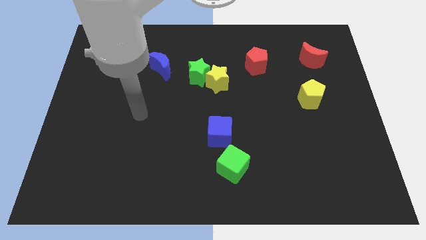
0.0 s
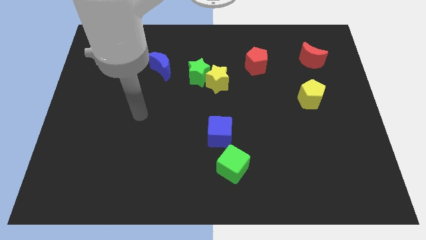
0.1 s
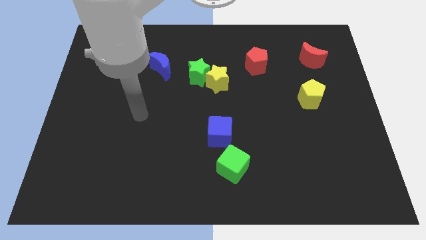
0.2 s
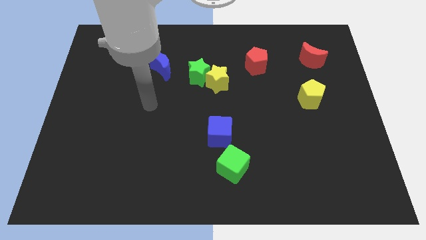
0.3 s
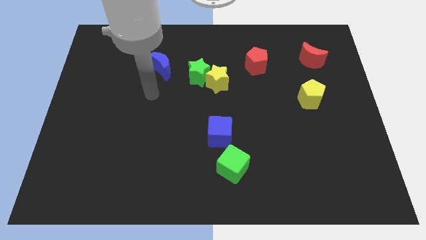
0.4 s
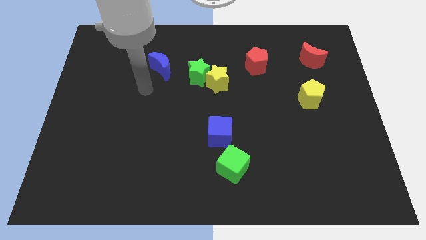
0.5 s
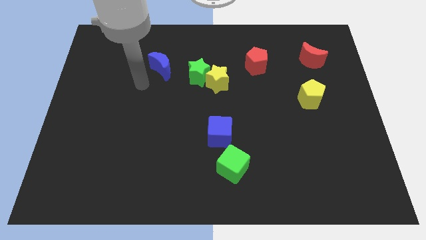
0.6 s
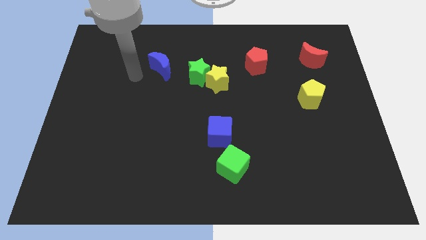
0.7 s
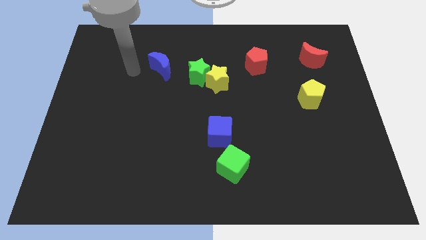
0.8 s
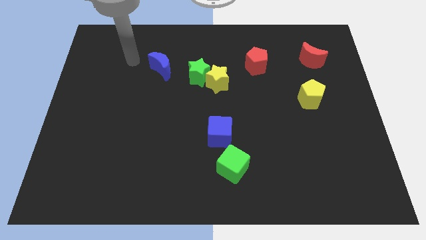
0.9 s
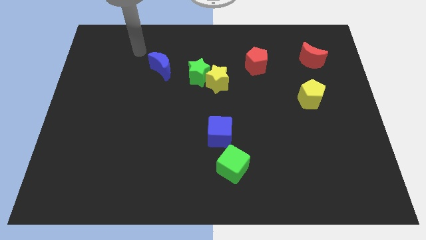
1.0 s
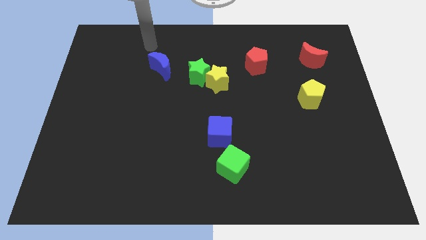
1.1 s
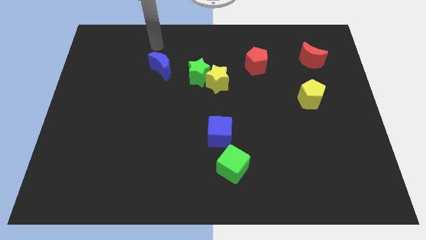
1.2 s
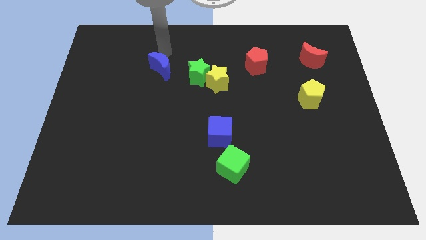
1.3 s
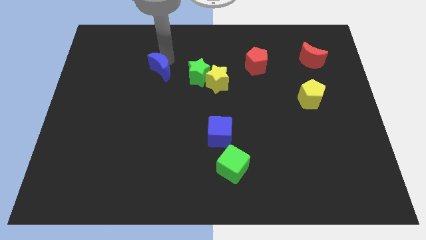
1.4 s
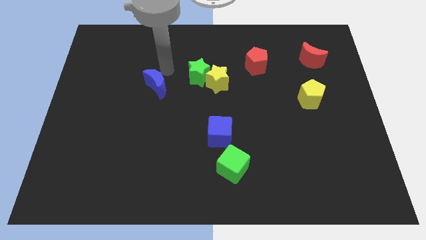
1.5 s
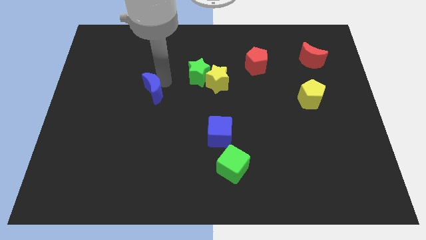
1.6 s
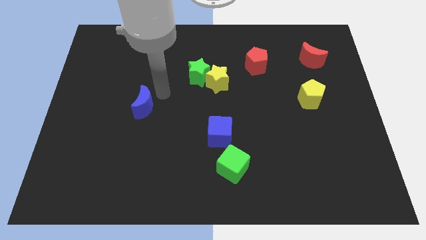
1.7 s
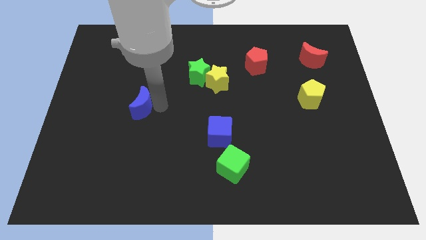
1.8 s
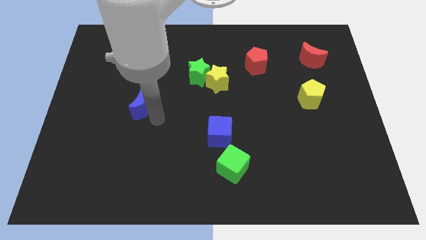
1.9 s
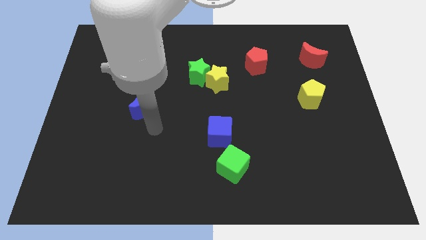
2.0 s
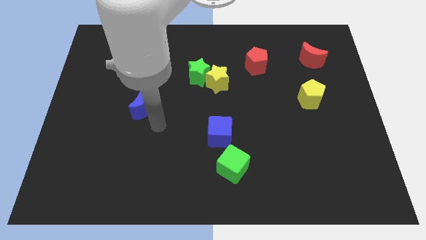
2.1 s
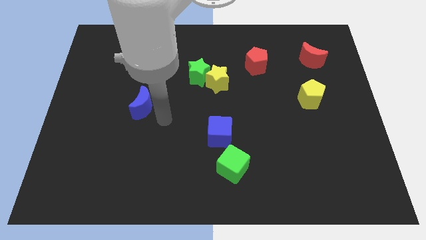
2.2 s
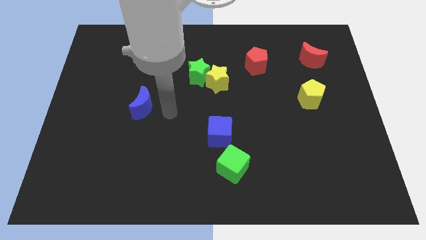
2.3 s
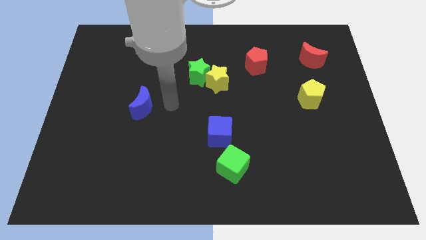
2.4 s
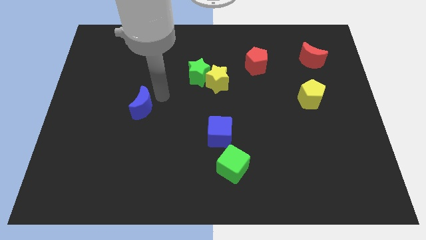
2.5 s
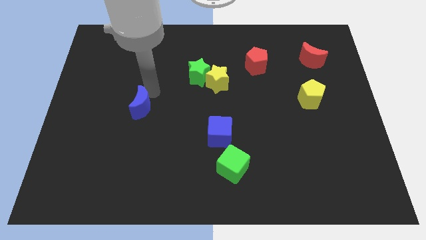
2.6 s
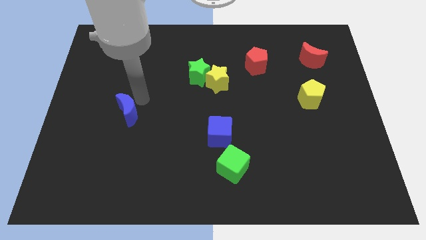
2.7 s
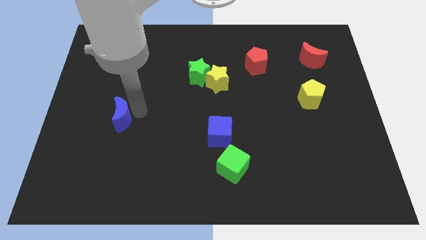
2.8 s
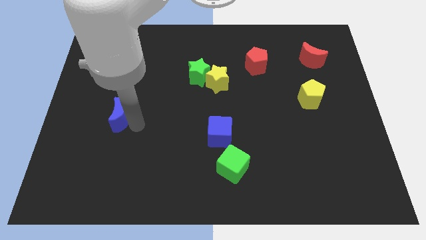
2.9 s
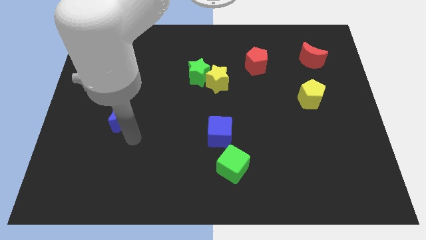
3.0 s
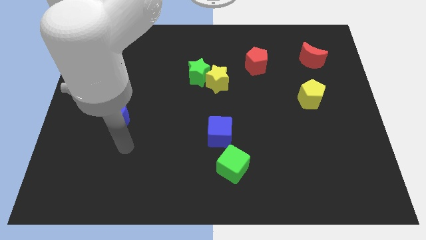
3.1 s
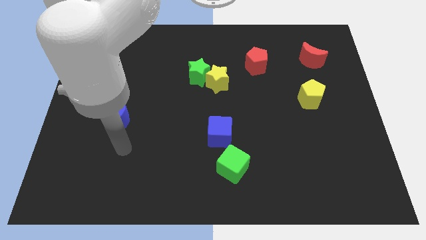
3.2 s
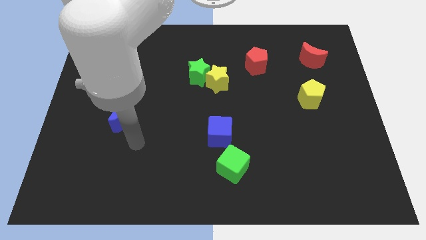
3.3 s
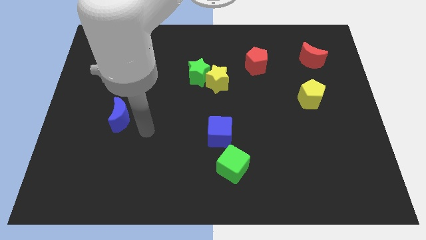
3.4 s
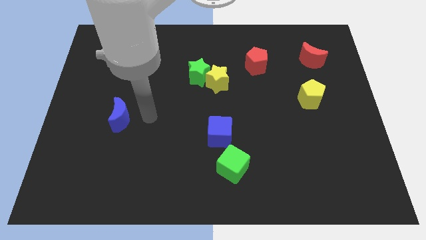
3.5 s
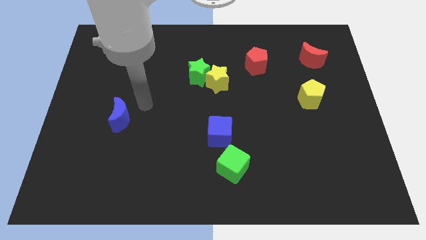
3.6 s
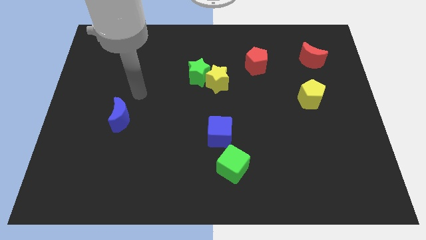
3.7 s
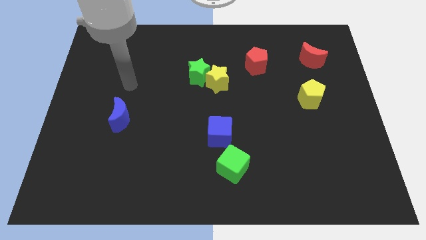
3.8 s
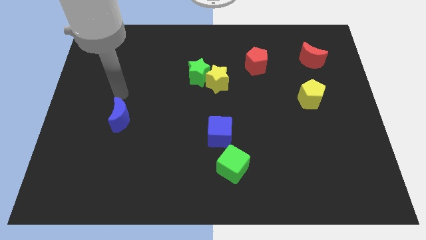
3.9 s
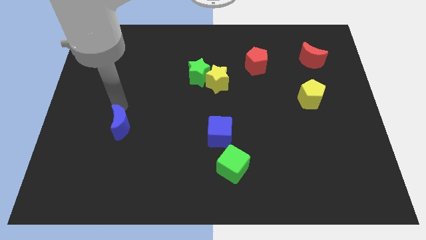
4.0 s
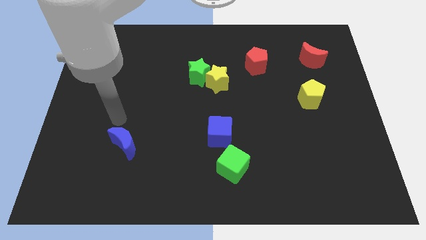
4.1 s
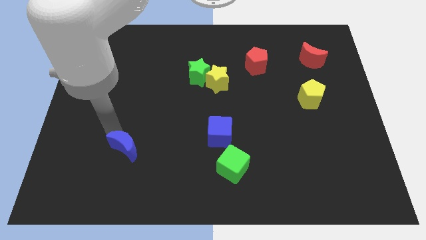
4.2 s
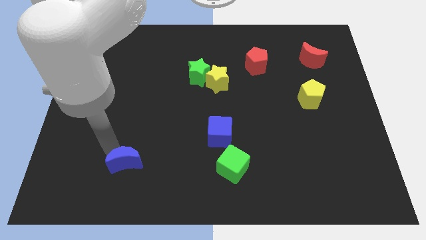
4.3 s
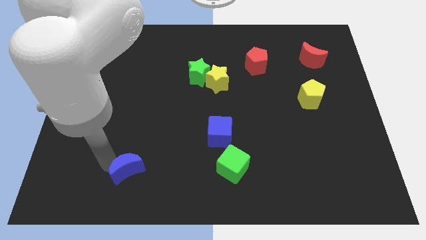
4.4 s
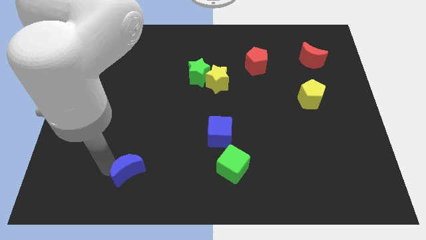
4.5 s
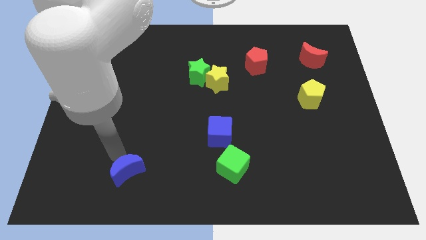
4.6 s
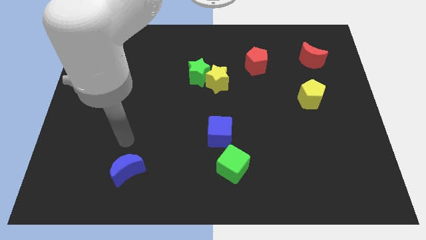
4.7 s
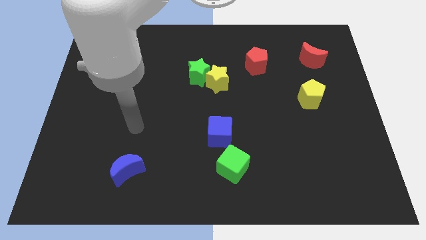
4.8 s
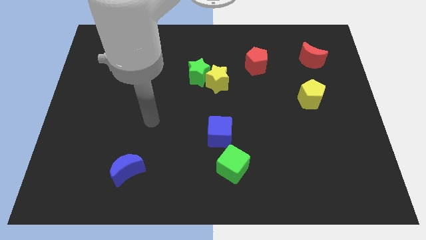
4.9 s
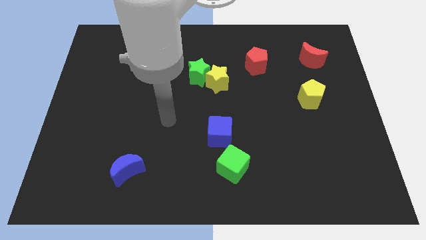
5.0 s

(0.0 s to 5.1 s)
push the blue moon to the bottom of the board

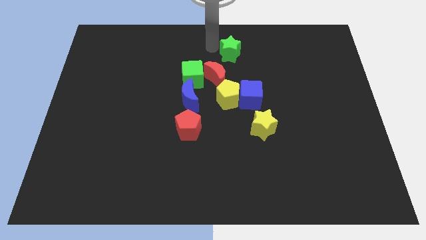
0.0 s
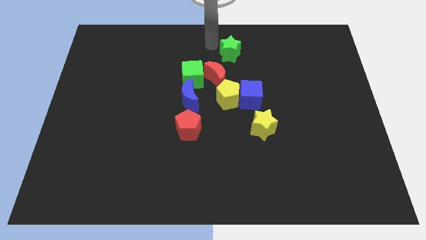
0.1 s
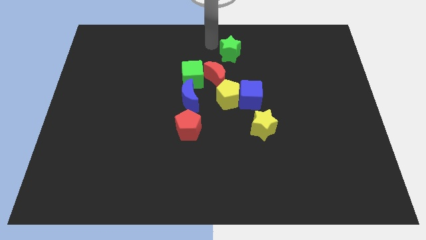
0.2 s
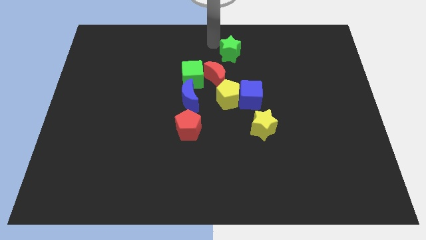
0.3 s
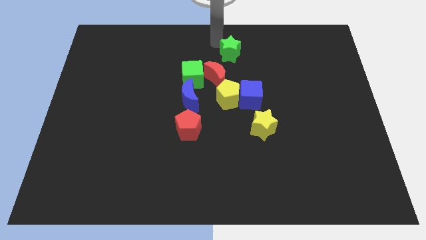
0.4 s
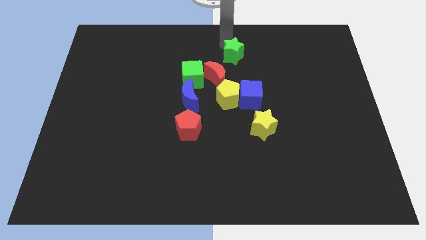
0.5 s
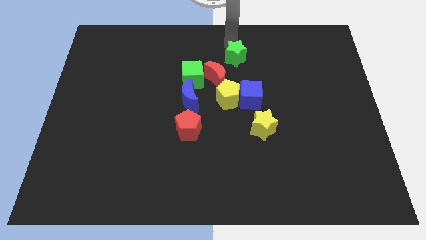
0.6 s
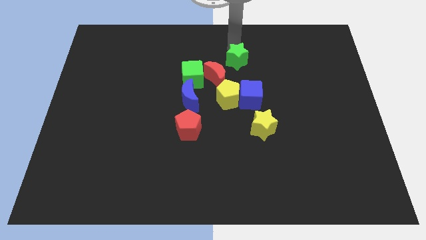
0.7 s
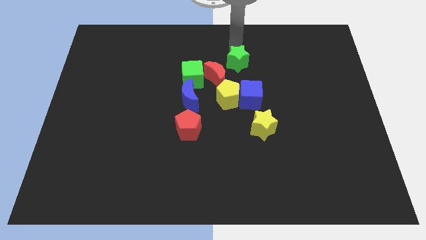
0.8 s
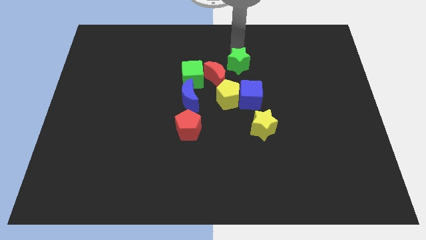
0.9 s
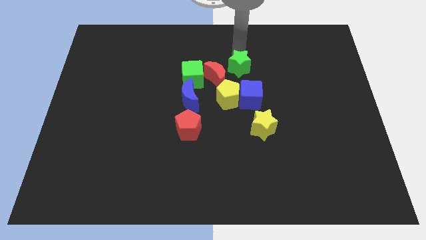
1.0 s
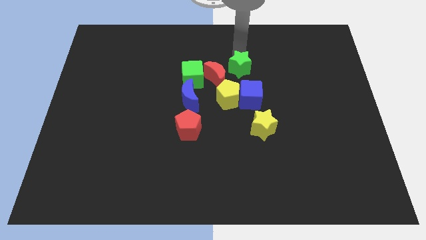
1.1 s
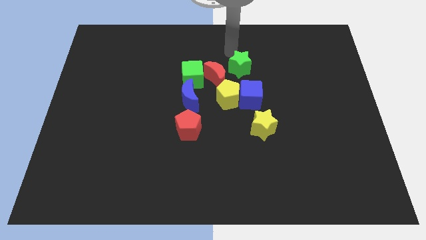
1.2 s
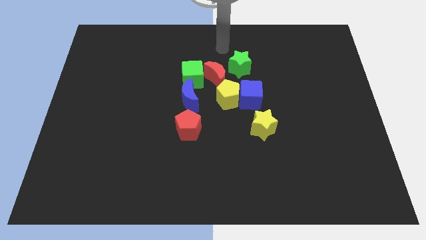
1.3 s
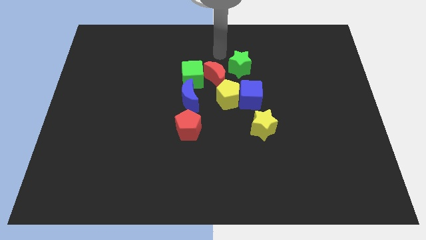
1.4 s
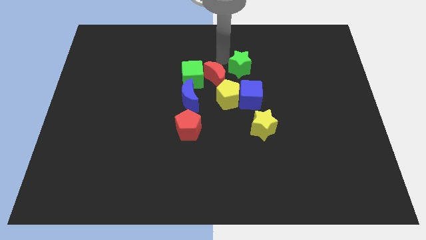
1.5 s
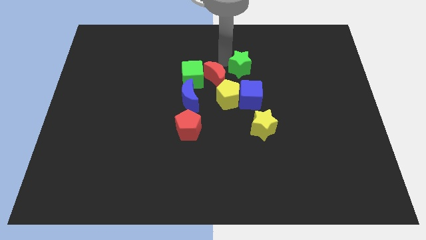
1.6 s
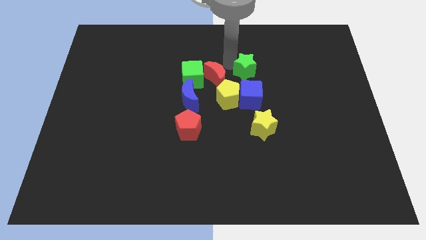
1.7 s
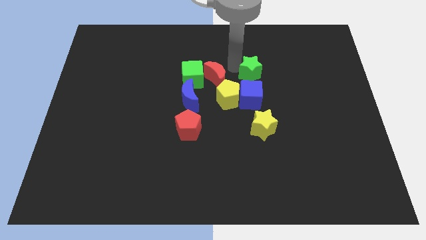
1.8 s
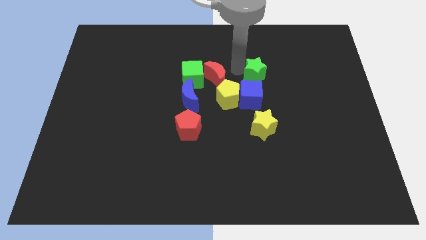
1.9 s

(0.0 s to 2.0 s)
place green star above the blue cube

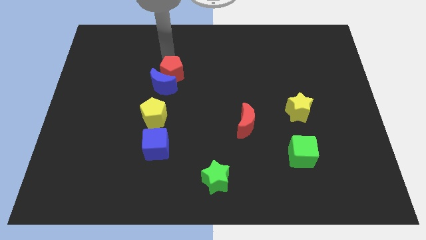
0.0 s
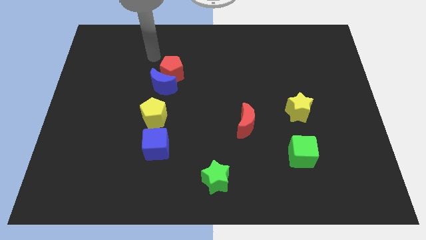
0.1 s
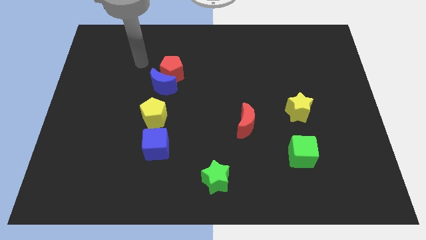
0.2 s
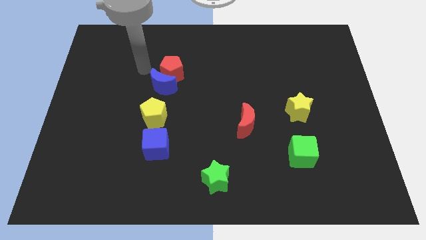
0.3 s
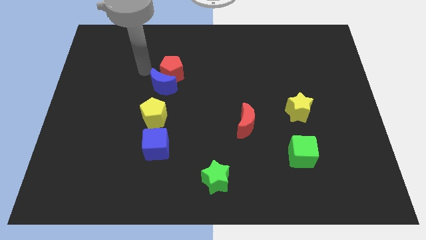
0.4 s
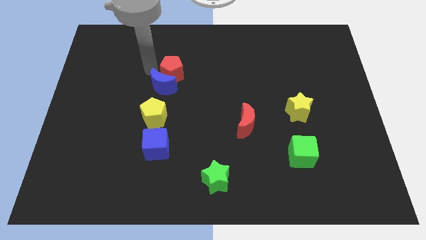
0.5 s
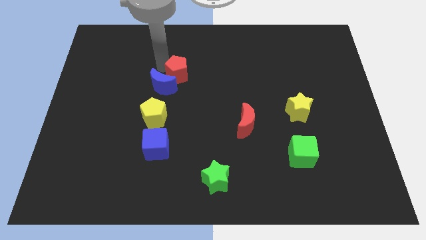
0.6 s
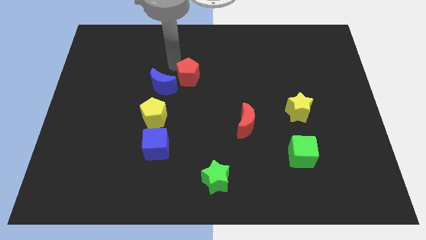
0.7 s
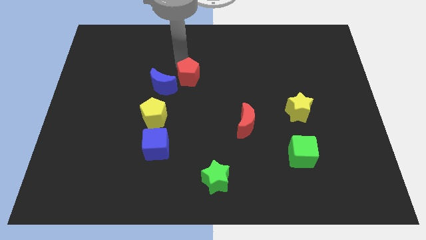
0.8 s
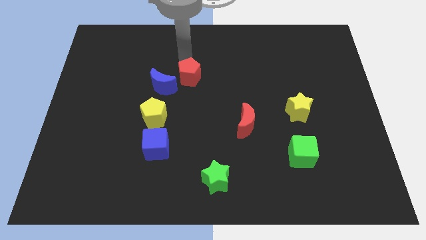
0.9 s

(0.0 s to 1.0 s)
separate the red pentagon from the blue crescent

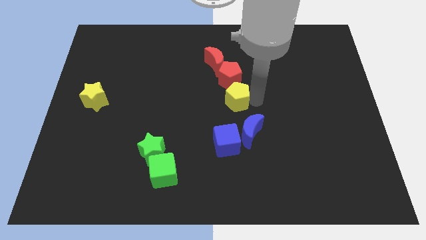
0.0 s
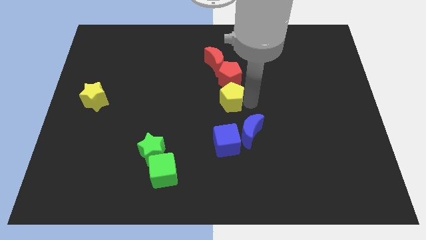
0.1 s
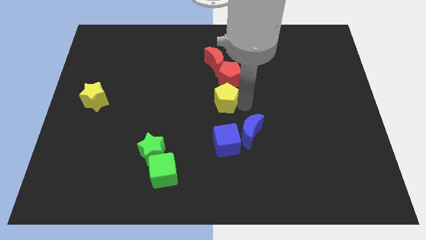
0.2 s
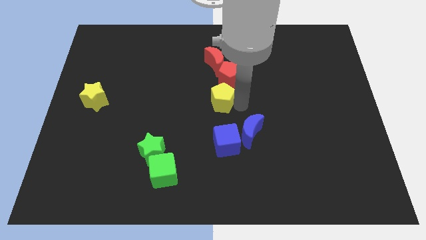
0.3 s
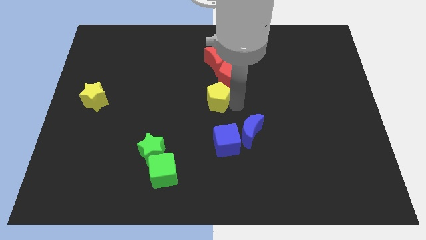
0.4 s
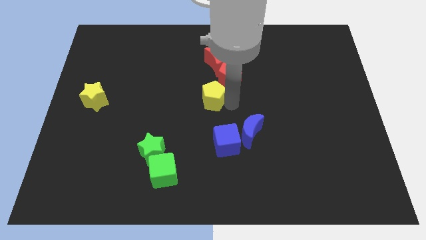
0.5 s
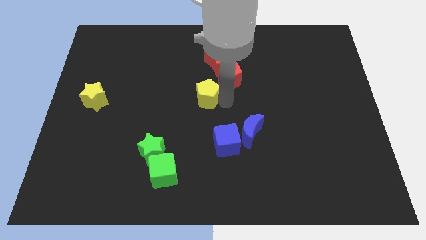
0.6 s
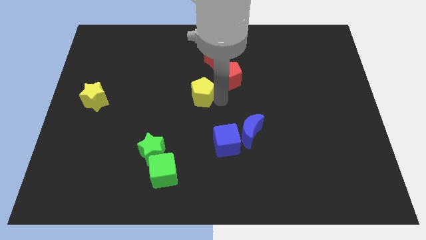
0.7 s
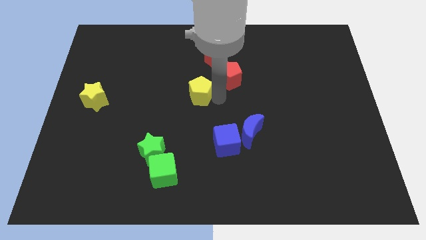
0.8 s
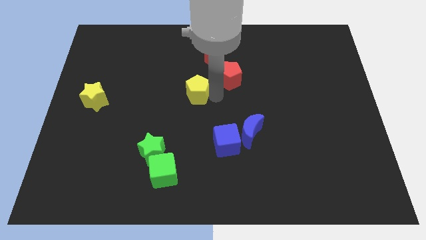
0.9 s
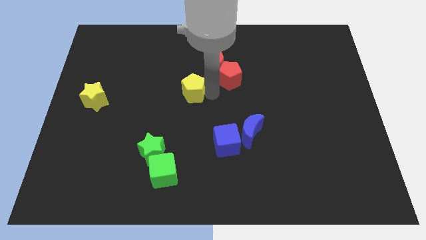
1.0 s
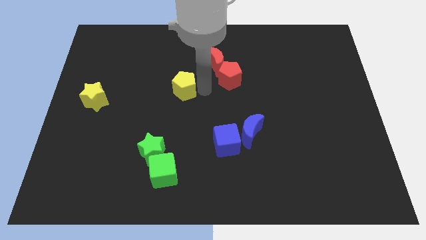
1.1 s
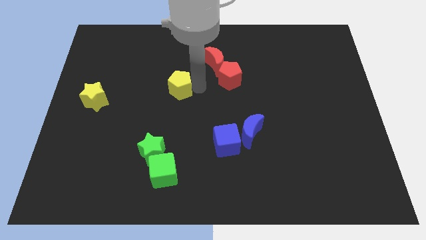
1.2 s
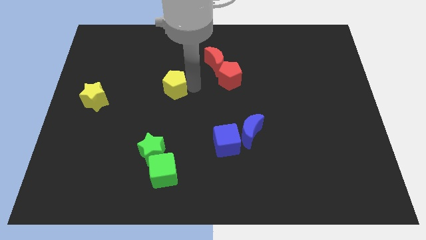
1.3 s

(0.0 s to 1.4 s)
push the yellow pentagon to the left of the board
